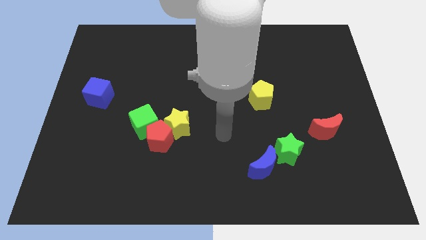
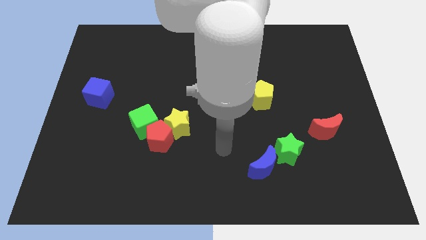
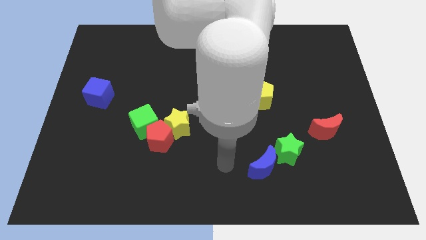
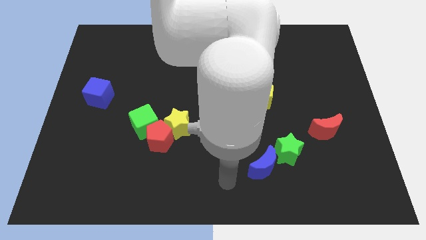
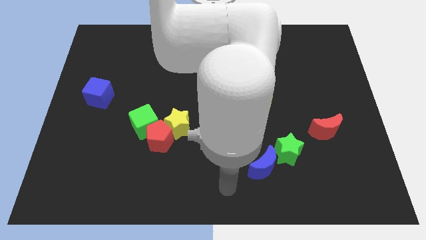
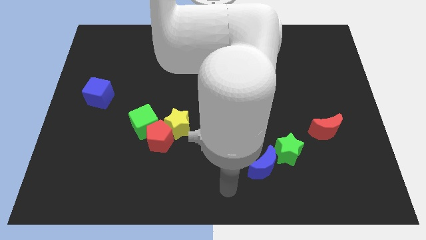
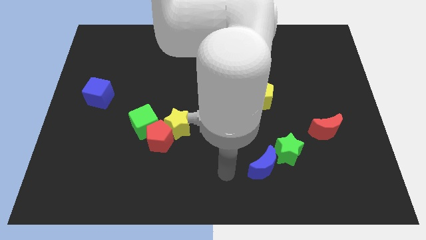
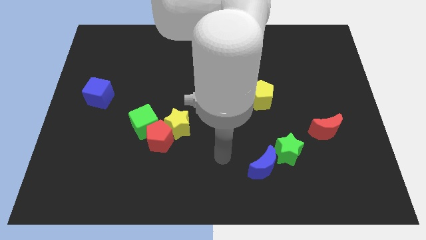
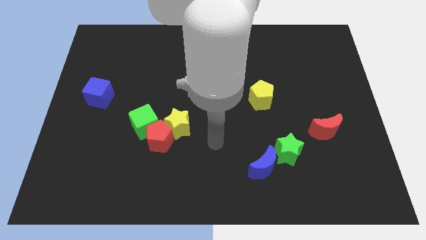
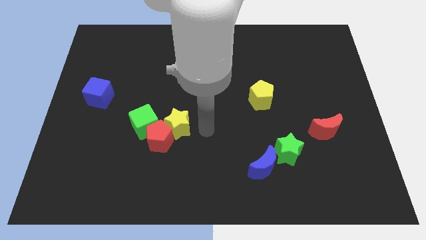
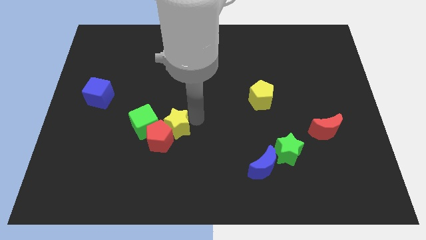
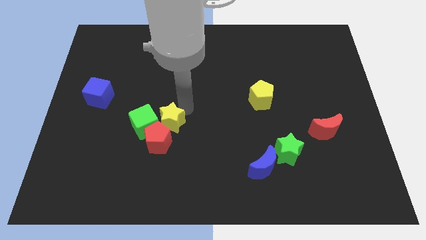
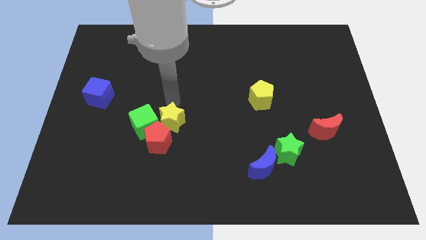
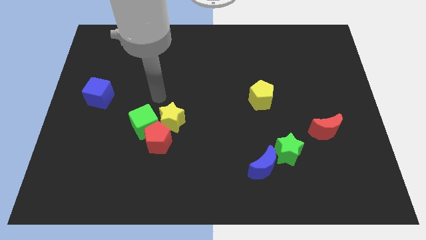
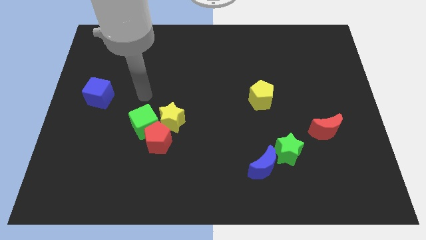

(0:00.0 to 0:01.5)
tap the yellow star

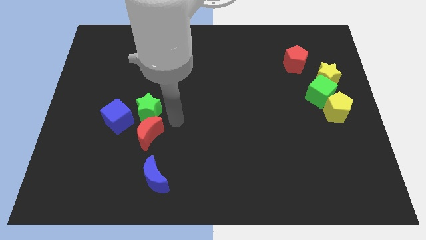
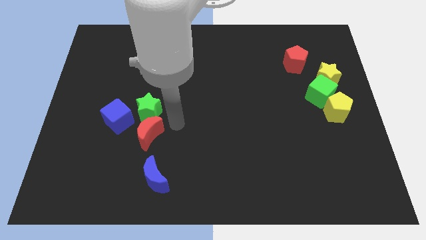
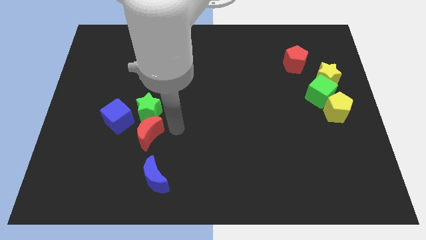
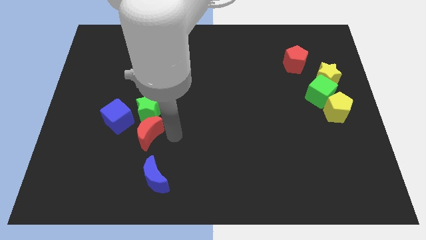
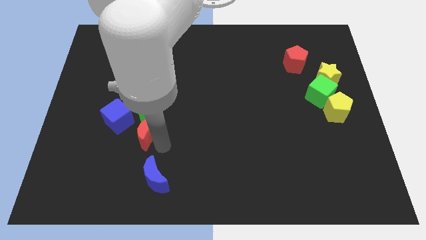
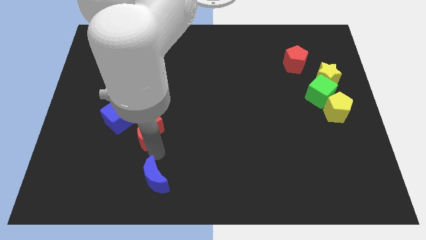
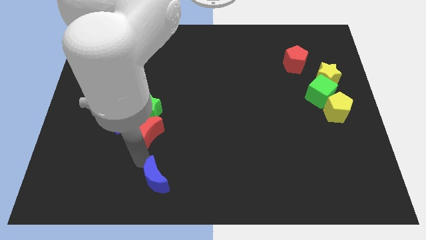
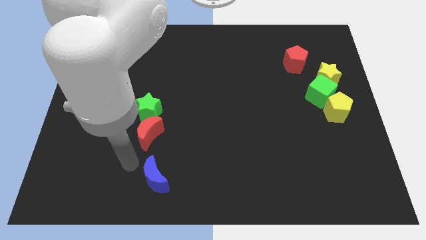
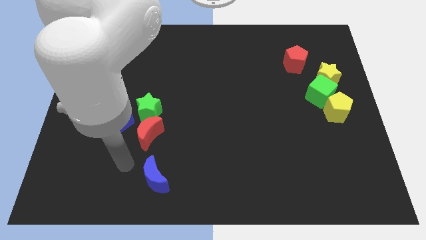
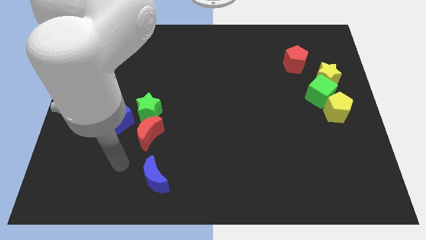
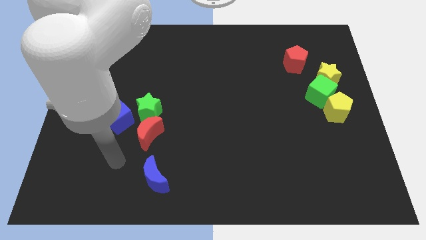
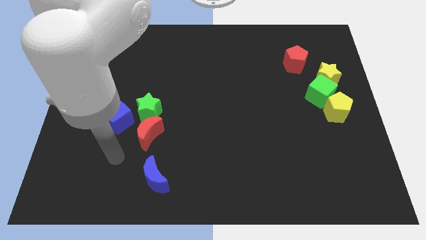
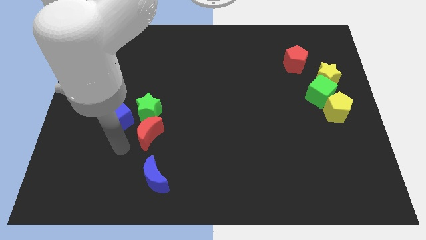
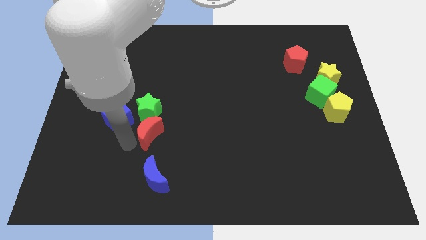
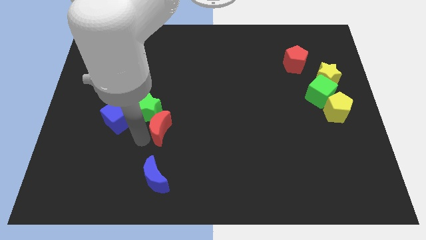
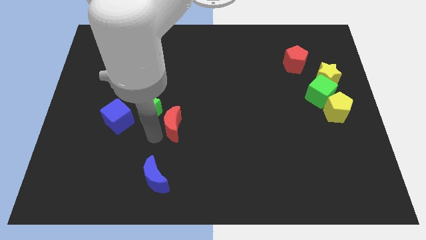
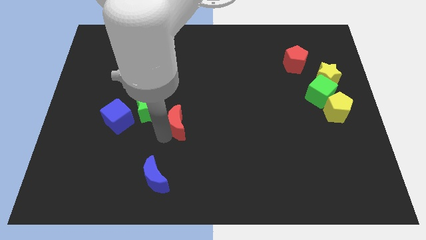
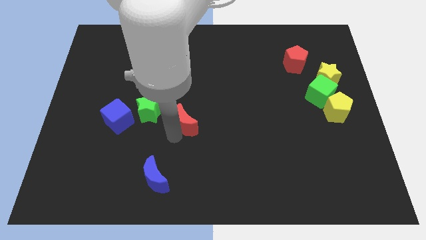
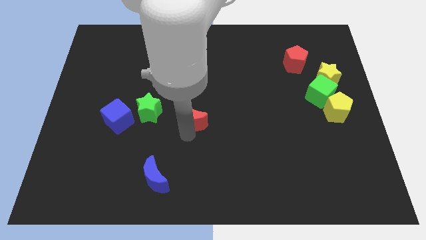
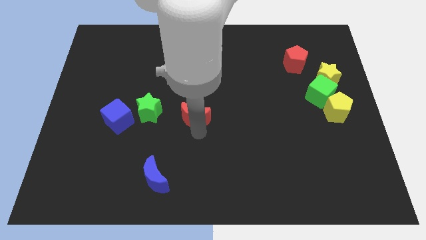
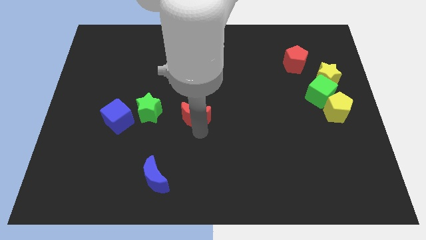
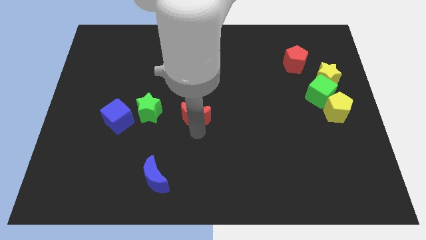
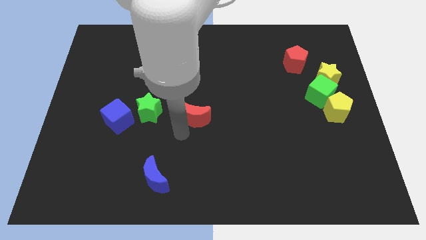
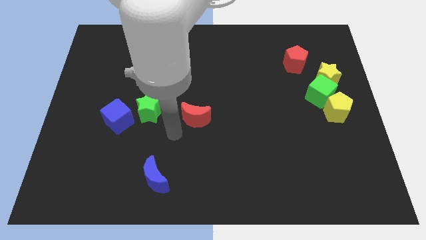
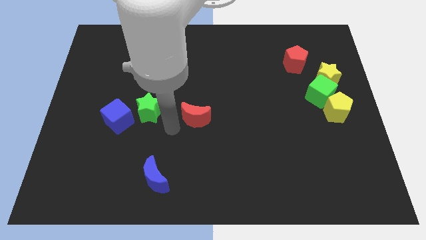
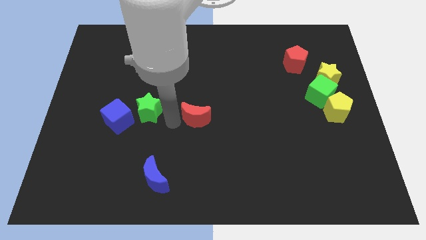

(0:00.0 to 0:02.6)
place the red moon to the right of the green star

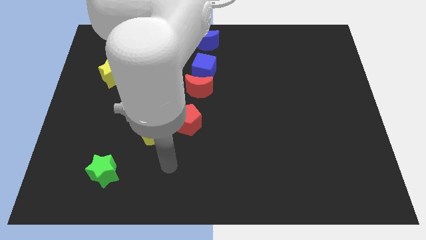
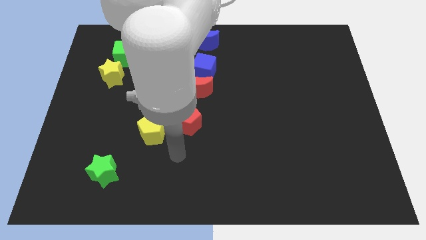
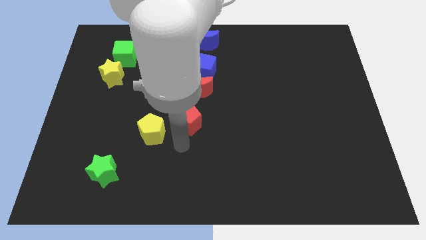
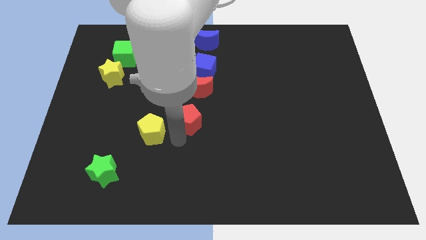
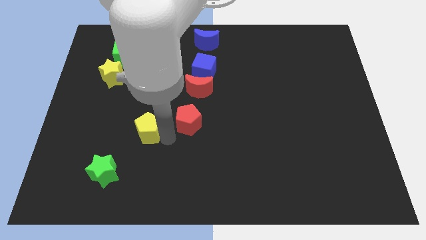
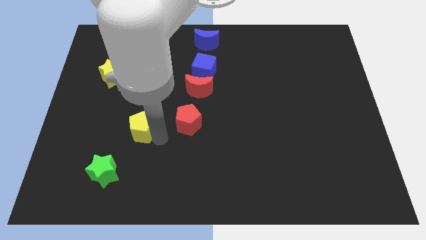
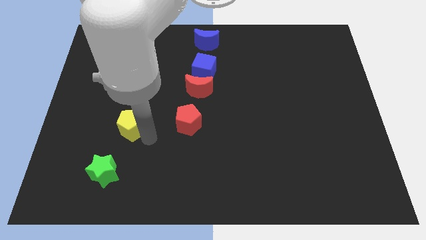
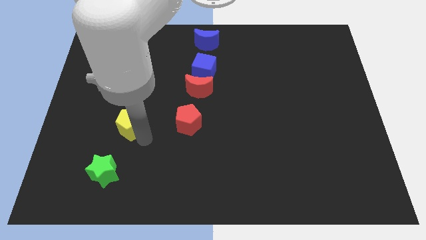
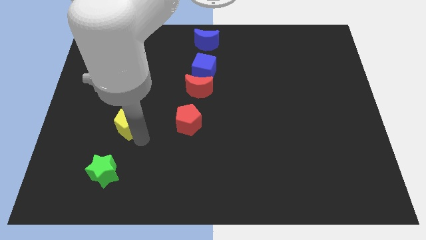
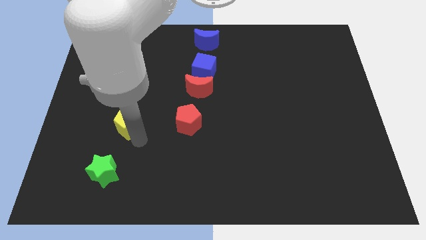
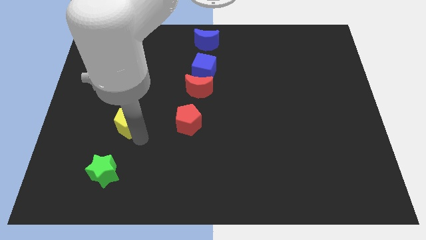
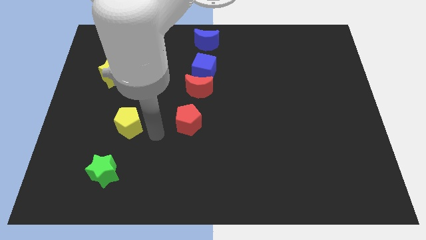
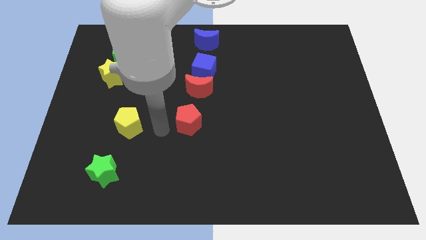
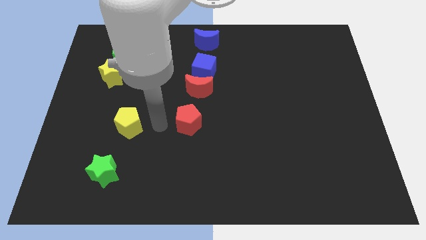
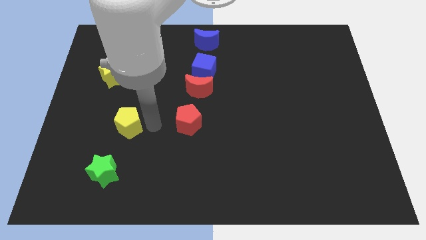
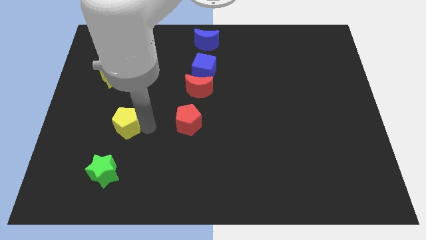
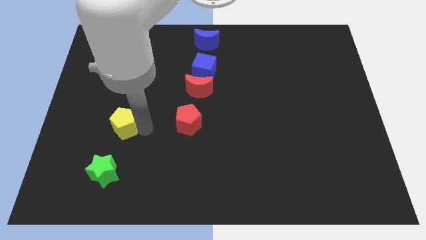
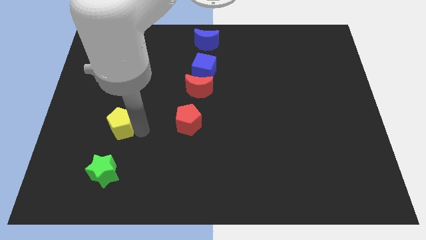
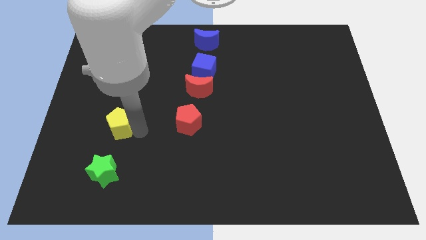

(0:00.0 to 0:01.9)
move the yellow pentagon slightly to the left side

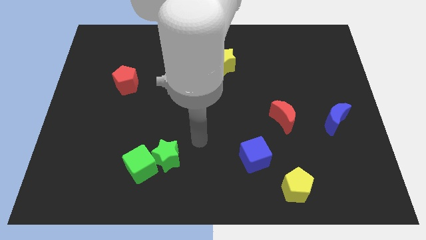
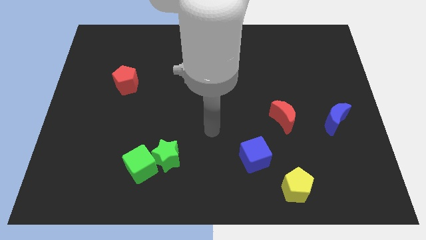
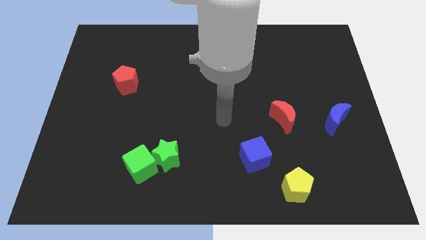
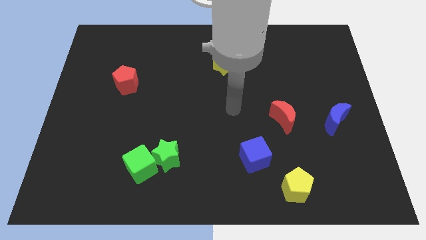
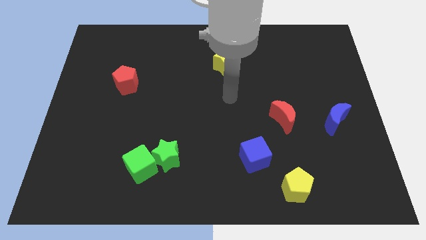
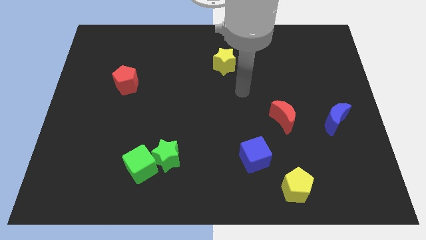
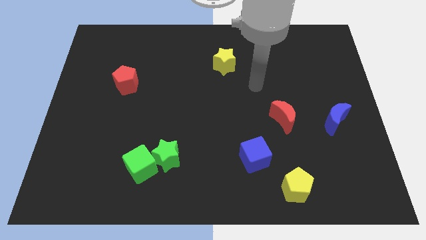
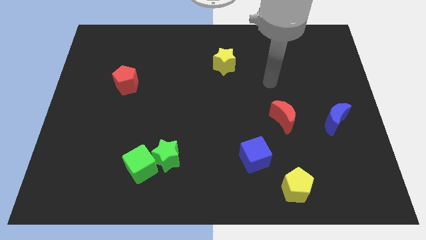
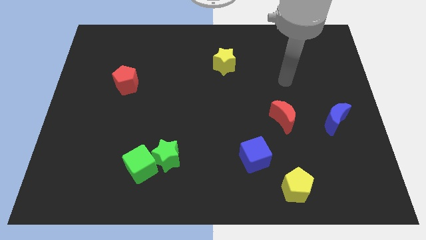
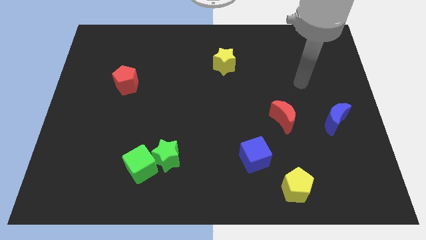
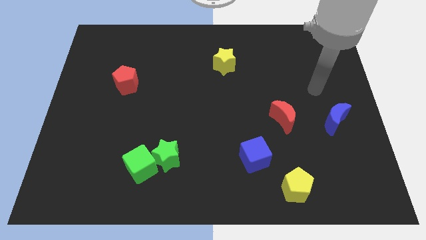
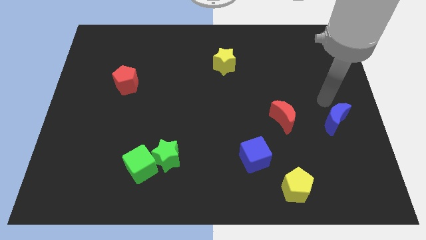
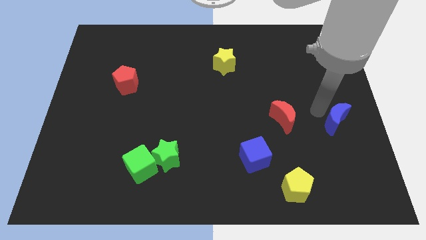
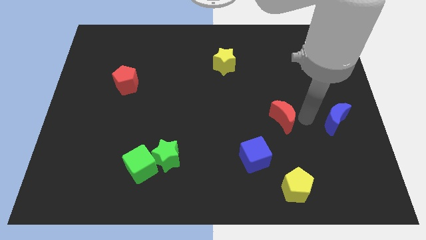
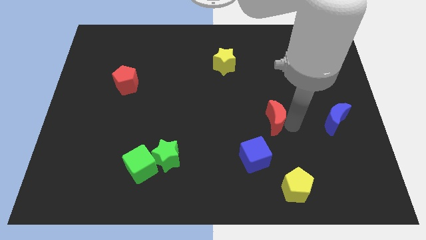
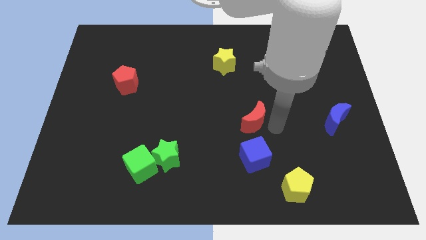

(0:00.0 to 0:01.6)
move the red crescent to the top of the blue cube

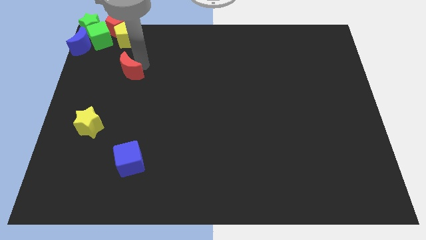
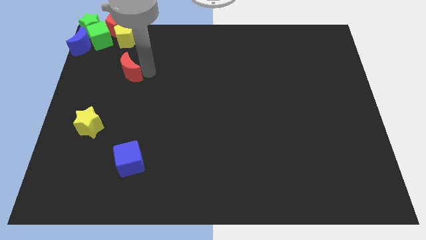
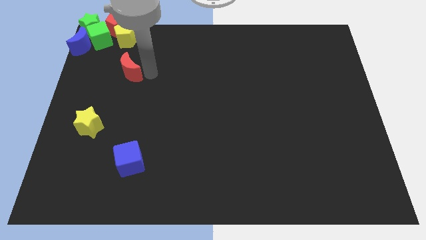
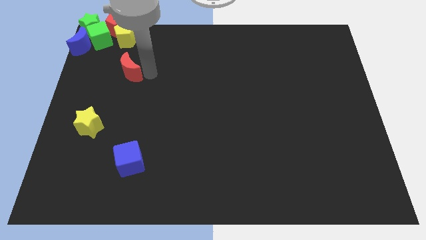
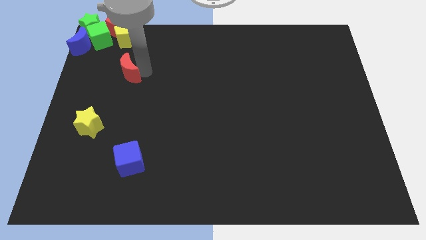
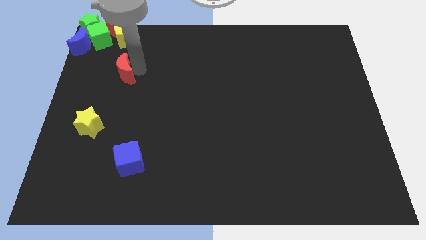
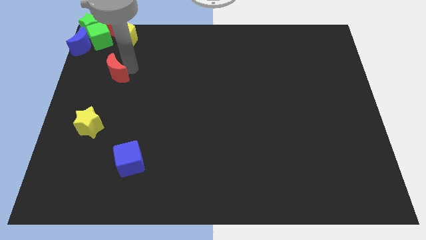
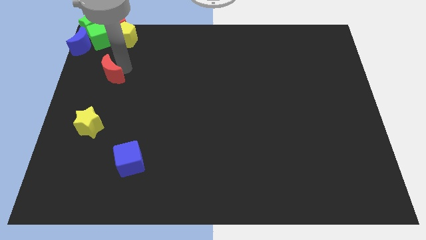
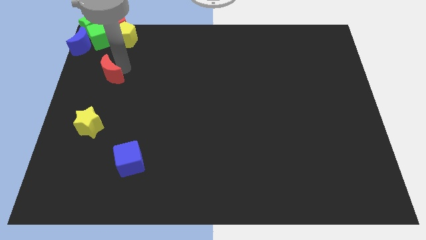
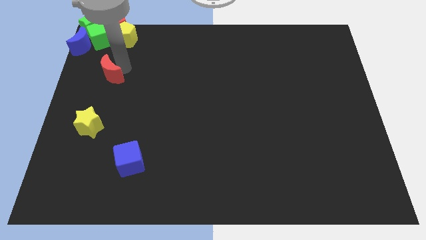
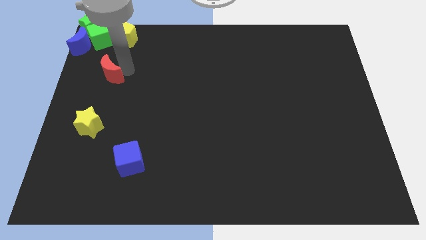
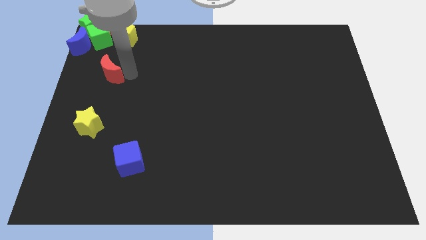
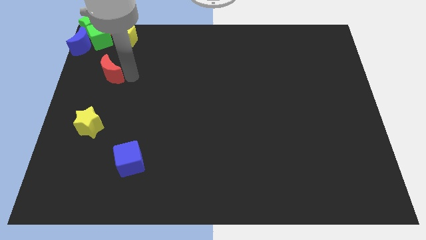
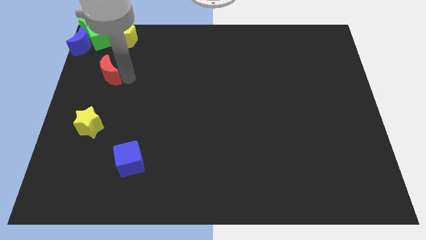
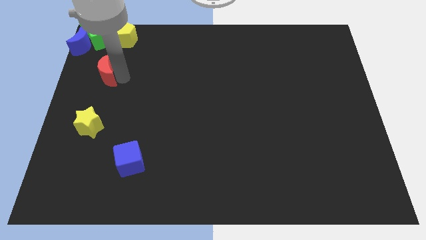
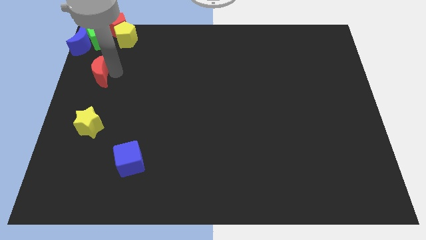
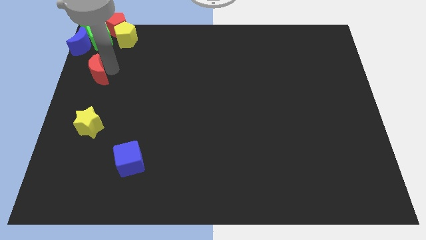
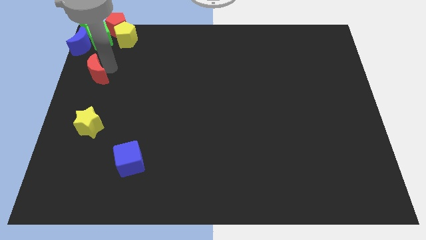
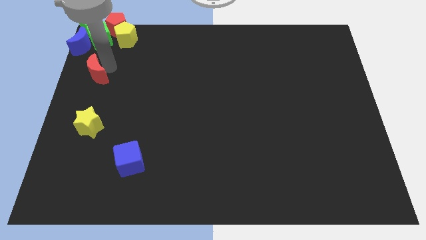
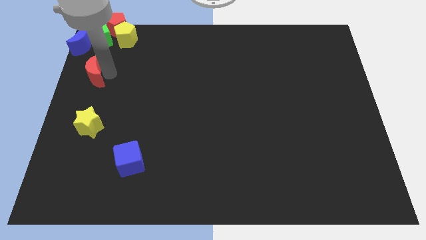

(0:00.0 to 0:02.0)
place the red crescent vertically above the yellow star
